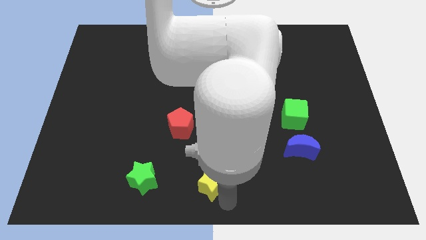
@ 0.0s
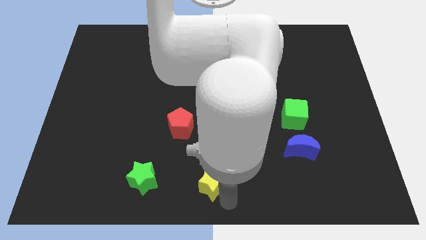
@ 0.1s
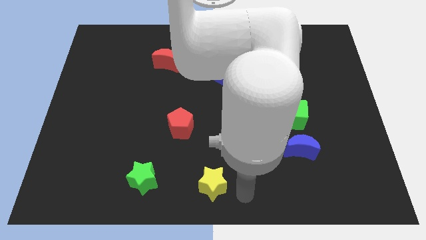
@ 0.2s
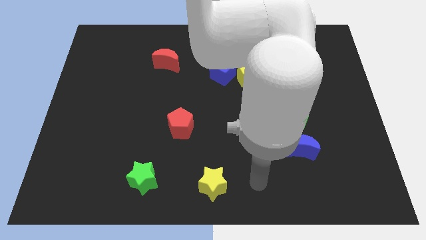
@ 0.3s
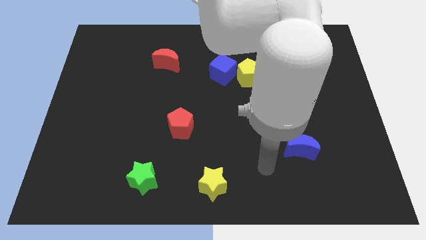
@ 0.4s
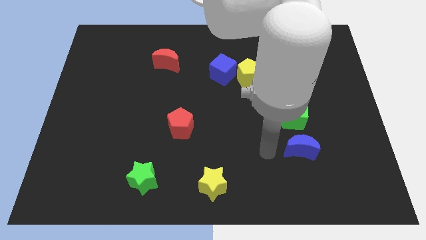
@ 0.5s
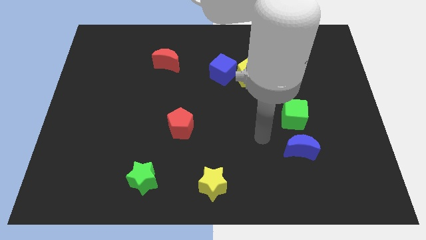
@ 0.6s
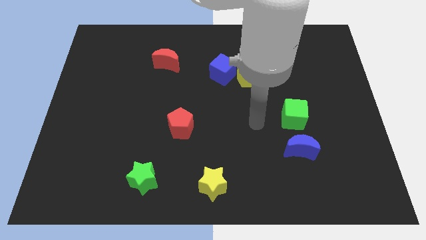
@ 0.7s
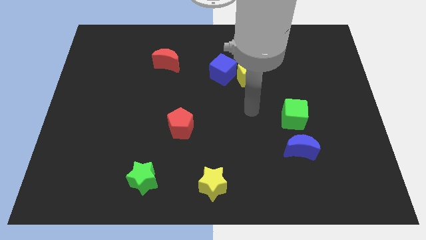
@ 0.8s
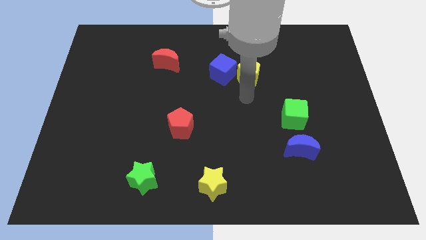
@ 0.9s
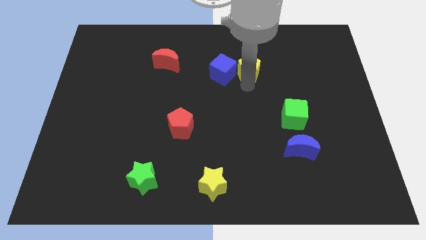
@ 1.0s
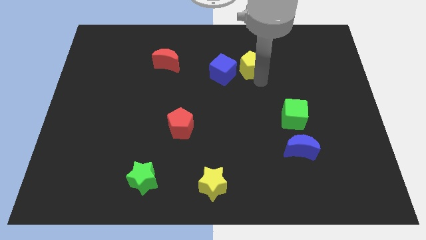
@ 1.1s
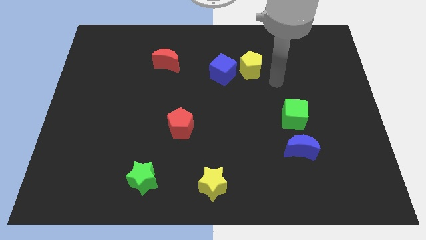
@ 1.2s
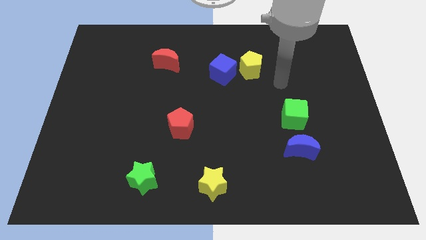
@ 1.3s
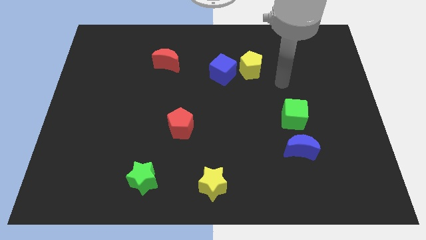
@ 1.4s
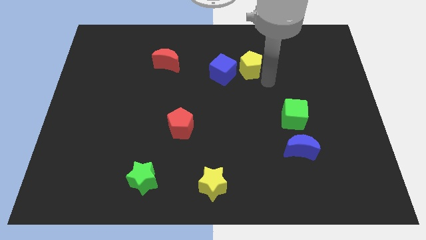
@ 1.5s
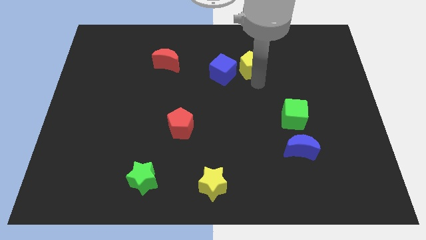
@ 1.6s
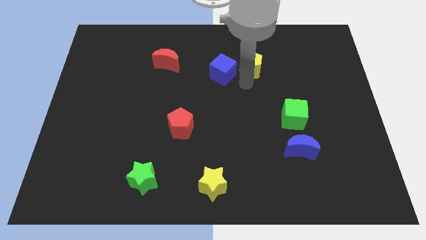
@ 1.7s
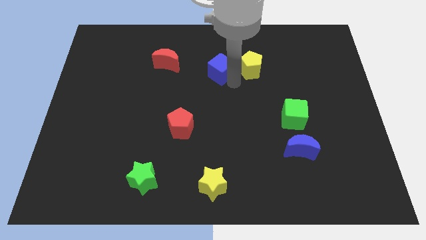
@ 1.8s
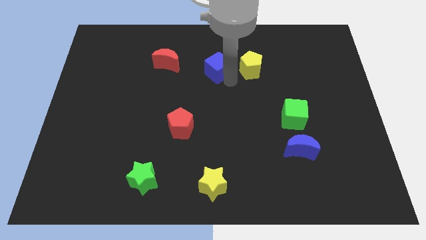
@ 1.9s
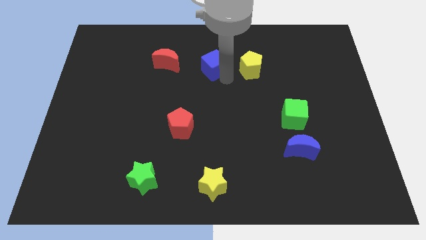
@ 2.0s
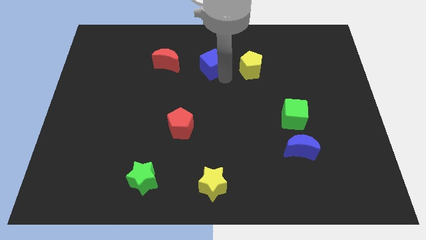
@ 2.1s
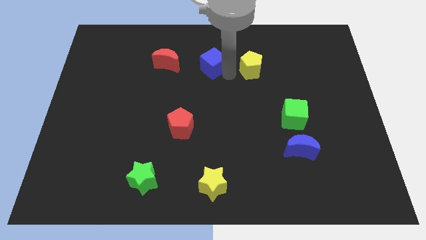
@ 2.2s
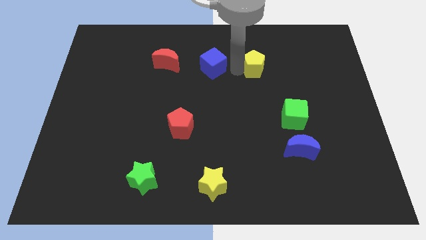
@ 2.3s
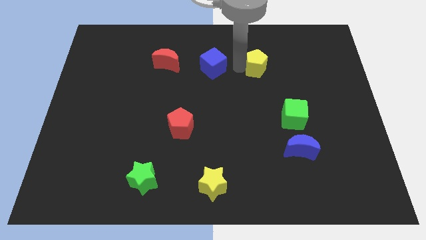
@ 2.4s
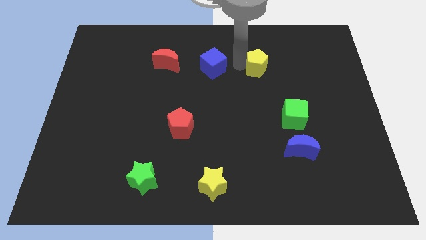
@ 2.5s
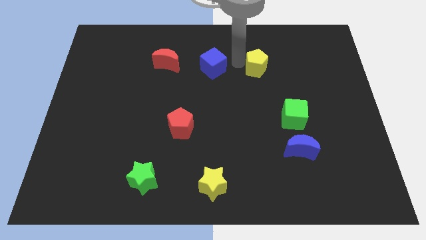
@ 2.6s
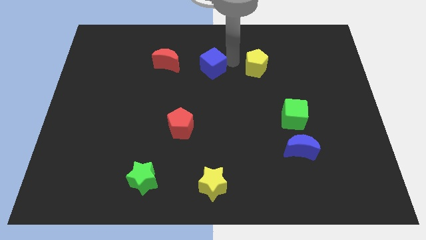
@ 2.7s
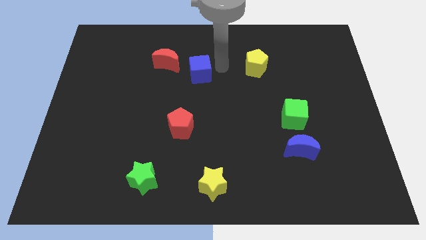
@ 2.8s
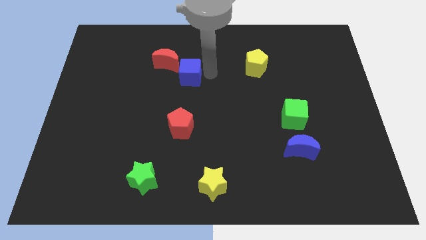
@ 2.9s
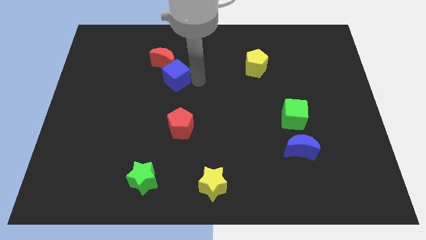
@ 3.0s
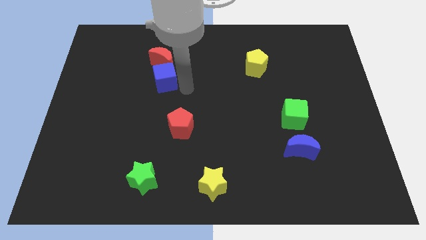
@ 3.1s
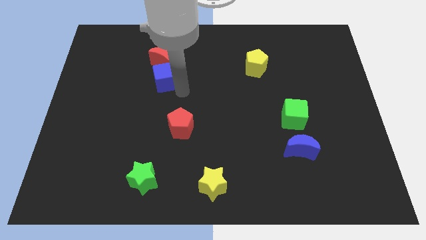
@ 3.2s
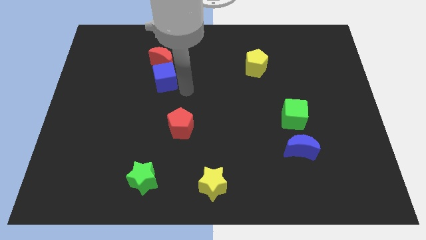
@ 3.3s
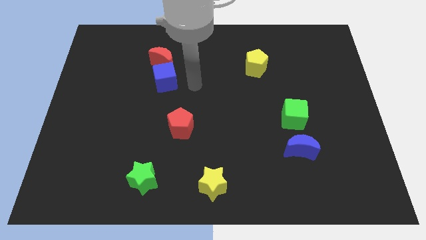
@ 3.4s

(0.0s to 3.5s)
push the blue cube into the red moon

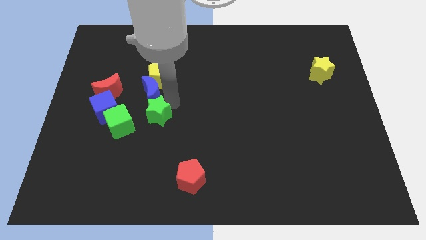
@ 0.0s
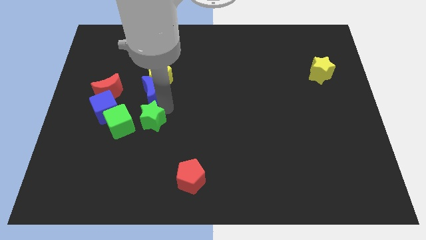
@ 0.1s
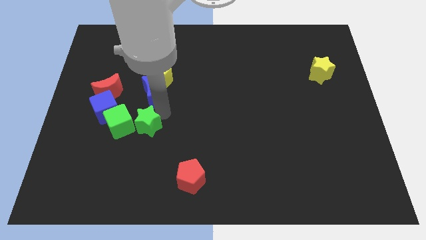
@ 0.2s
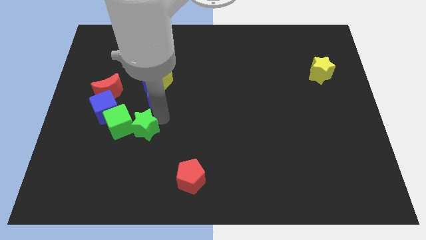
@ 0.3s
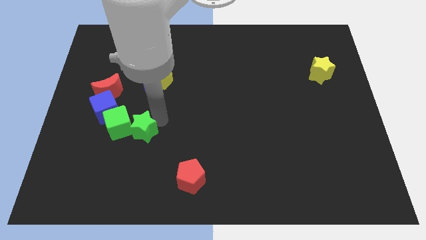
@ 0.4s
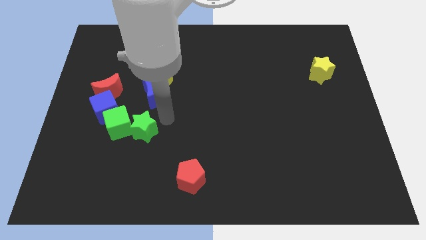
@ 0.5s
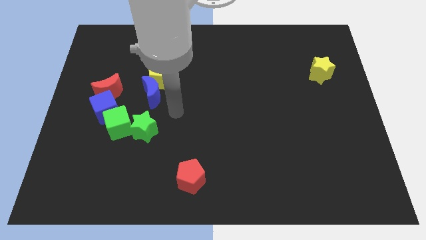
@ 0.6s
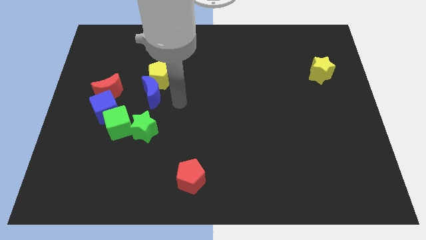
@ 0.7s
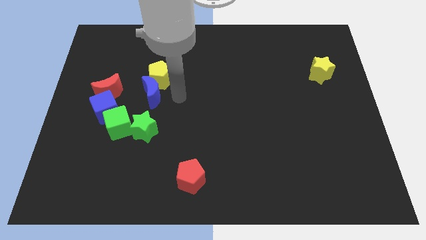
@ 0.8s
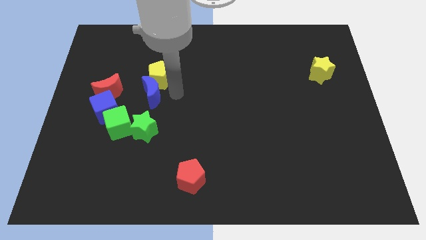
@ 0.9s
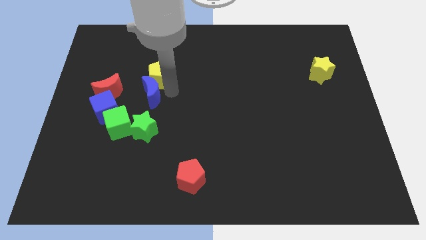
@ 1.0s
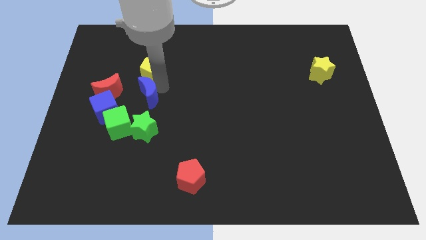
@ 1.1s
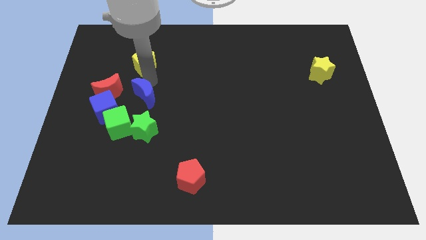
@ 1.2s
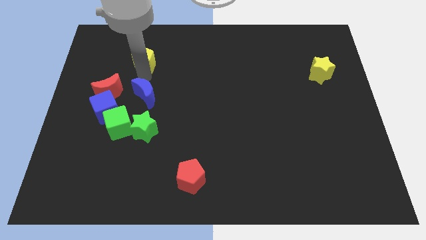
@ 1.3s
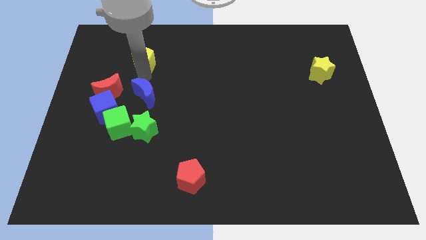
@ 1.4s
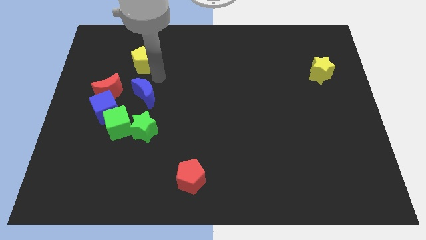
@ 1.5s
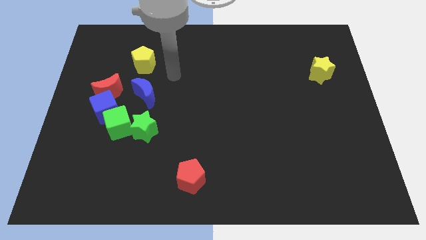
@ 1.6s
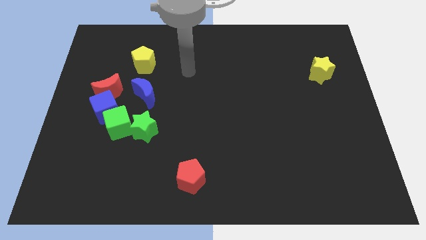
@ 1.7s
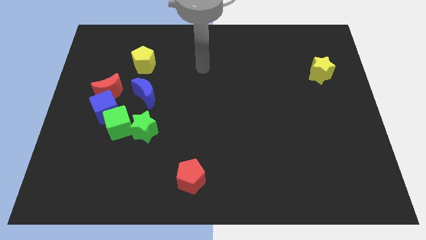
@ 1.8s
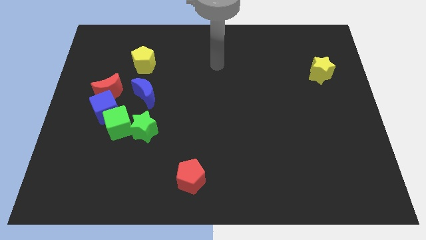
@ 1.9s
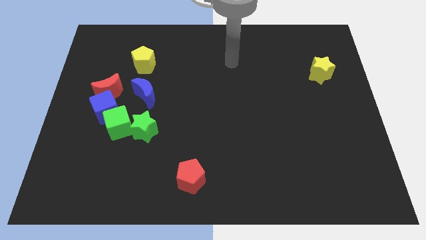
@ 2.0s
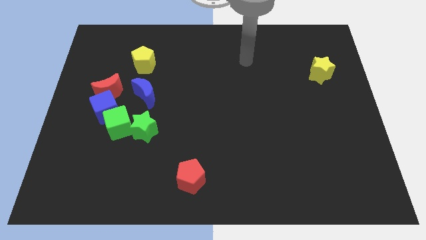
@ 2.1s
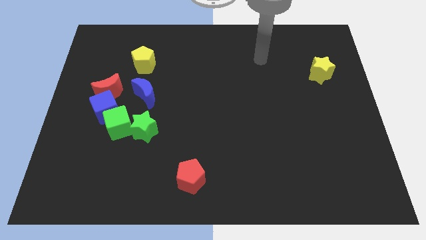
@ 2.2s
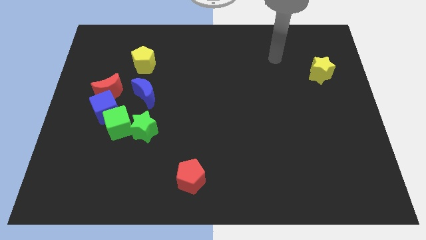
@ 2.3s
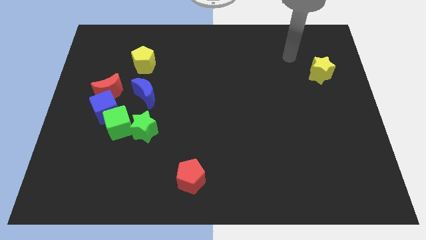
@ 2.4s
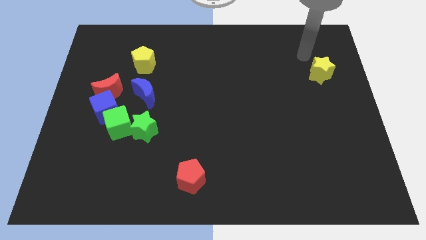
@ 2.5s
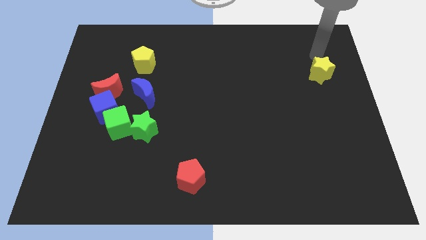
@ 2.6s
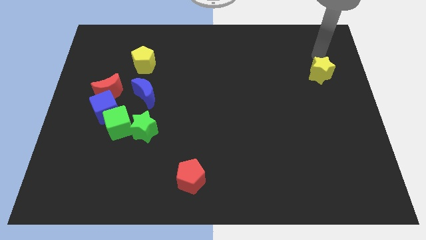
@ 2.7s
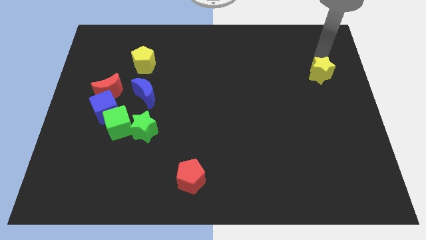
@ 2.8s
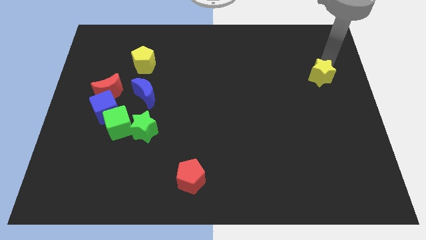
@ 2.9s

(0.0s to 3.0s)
move the arm above the yellow star

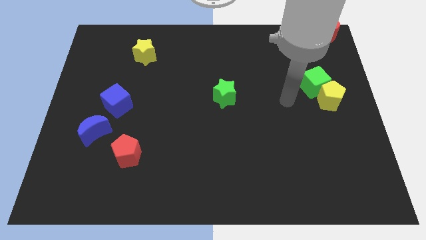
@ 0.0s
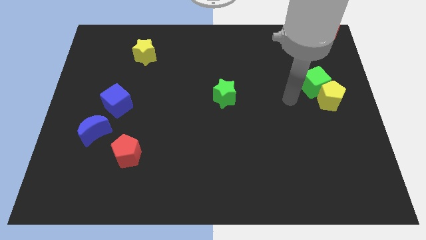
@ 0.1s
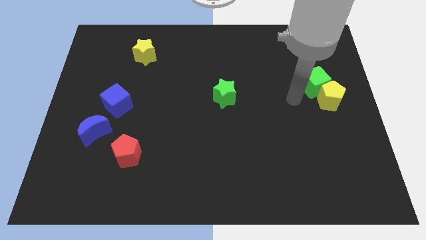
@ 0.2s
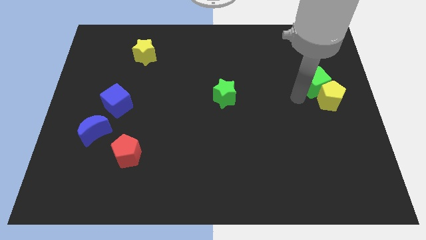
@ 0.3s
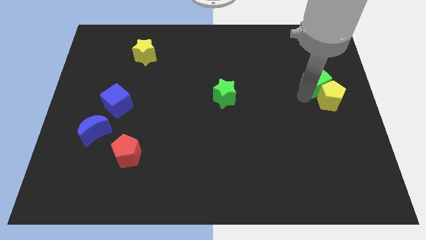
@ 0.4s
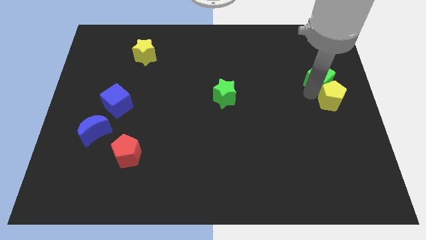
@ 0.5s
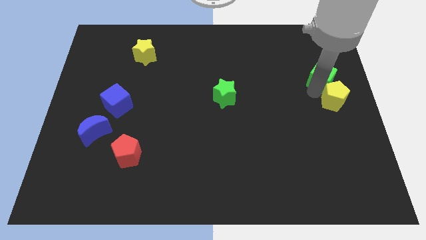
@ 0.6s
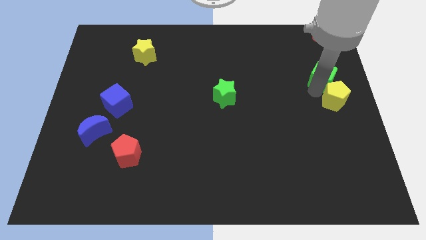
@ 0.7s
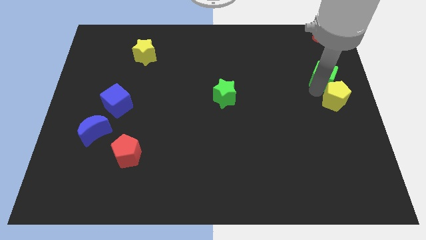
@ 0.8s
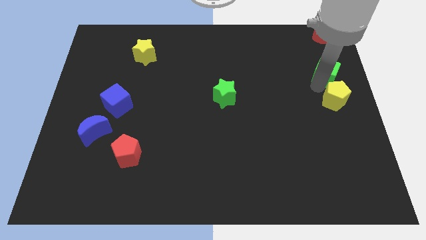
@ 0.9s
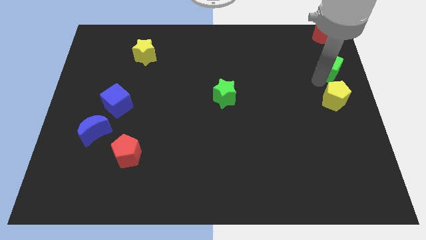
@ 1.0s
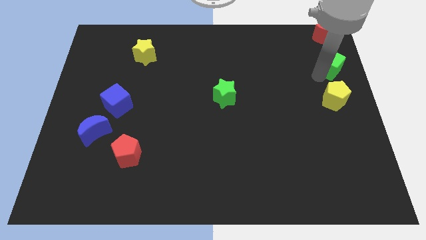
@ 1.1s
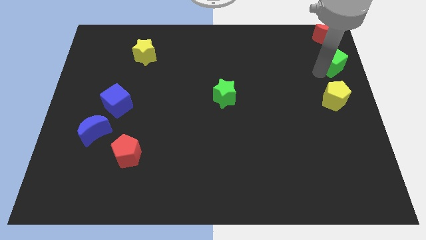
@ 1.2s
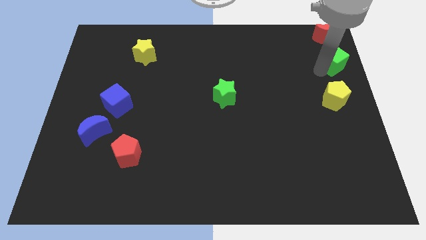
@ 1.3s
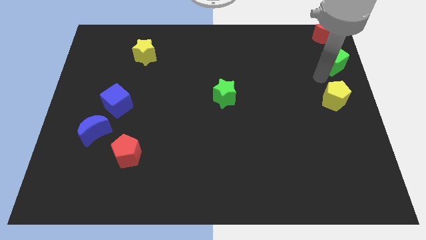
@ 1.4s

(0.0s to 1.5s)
separate the green cube and yellow pentagon

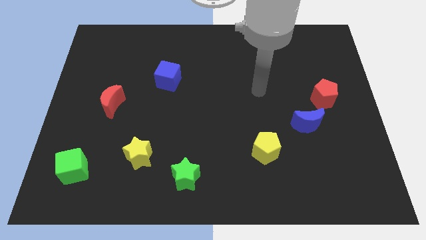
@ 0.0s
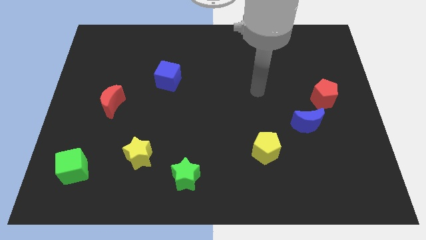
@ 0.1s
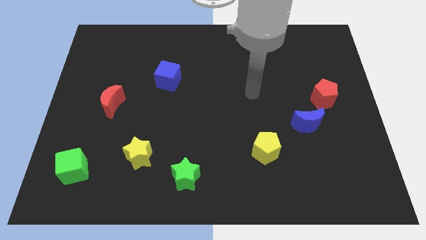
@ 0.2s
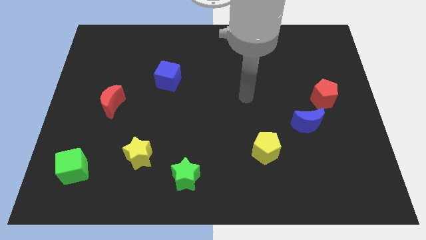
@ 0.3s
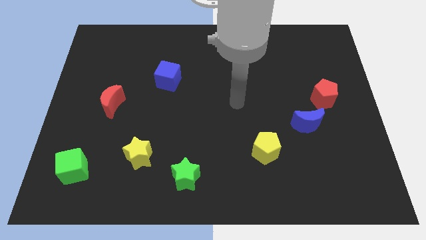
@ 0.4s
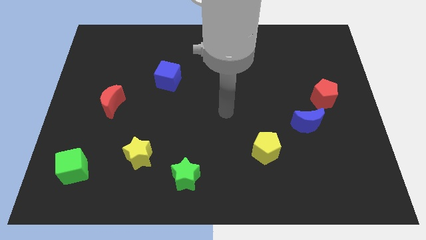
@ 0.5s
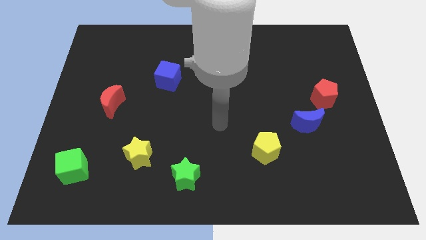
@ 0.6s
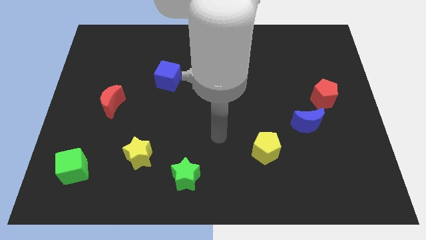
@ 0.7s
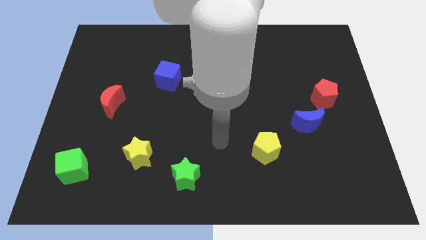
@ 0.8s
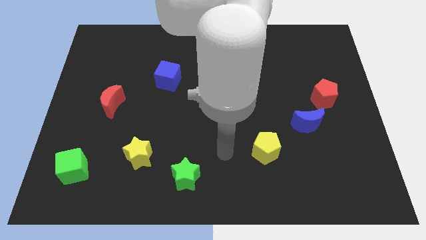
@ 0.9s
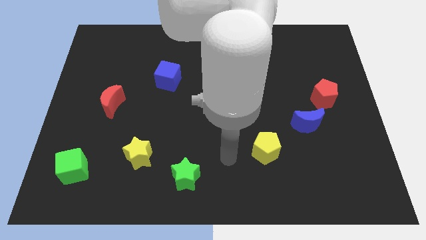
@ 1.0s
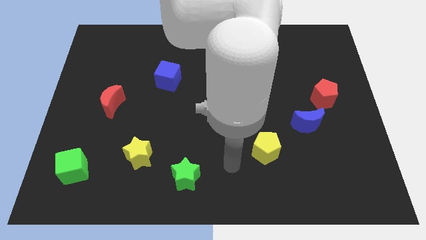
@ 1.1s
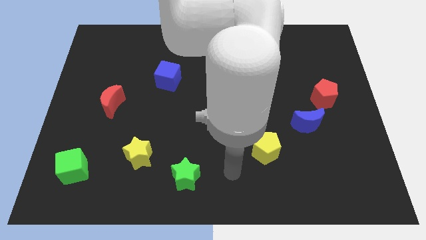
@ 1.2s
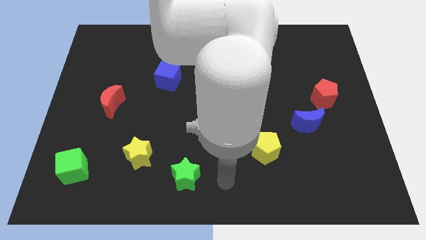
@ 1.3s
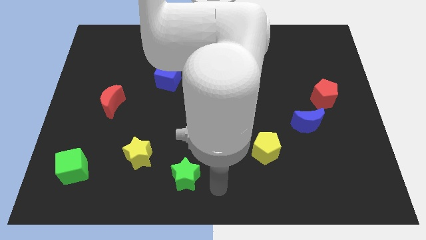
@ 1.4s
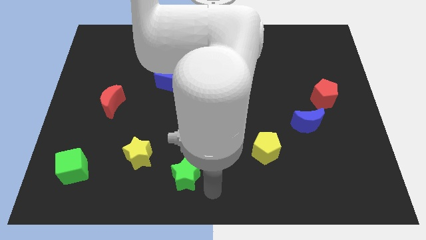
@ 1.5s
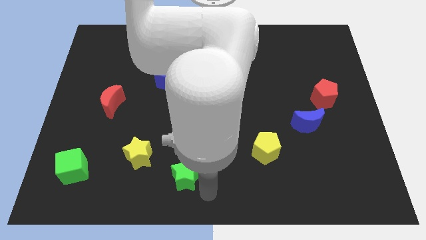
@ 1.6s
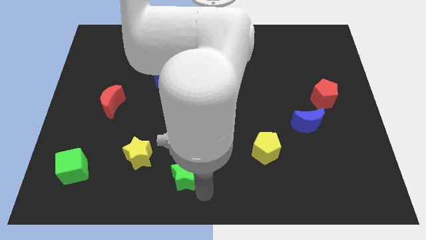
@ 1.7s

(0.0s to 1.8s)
move the arm at the bottom right of the green star
